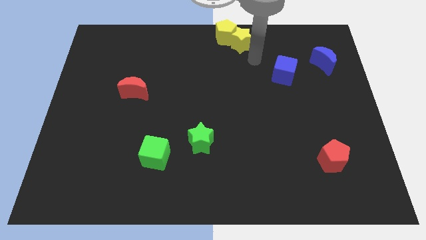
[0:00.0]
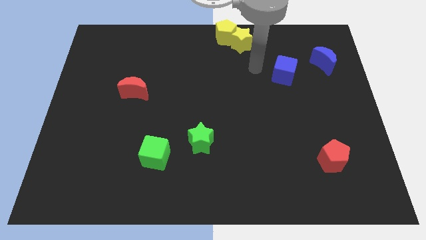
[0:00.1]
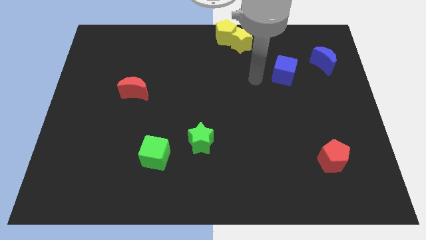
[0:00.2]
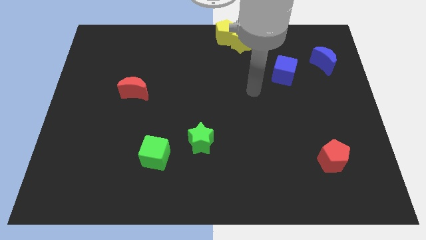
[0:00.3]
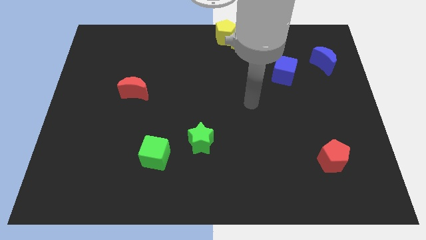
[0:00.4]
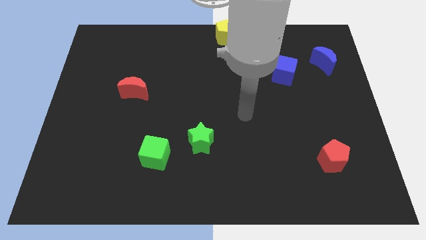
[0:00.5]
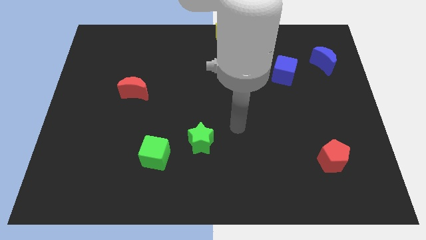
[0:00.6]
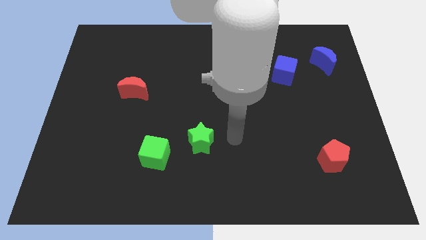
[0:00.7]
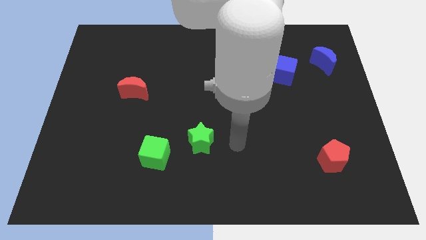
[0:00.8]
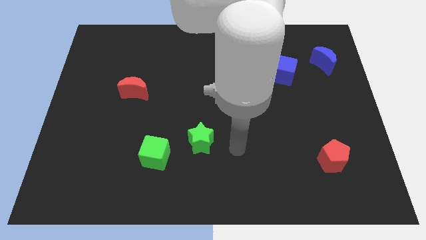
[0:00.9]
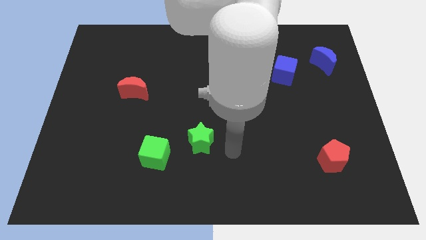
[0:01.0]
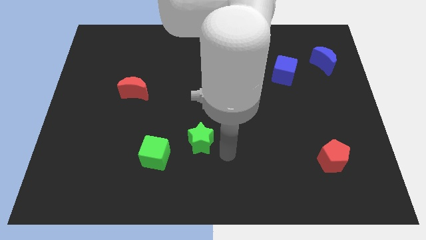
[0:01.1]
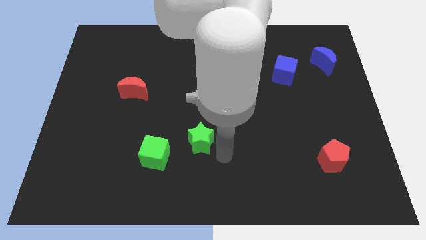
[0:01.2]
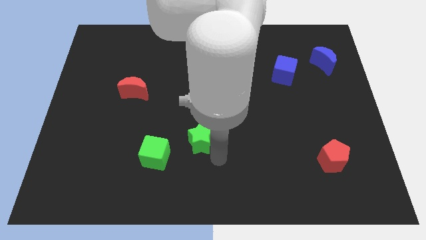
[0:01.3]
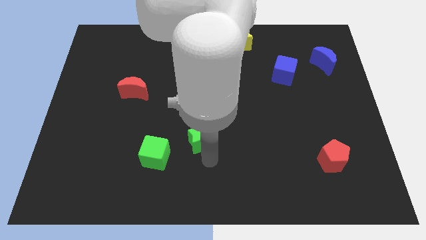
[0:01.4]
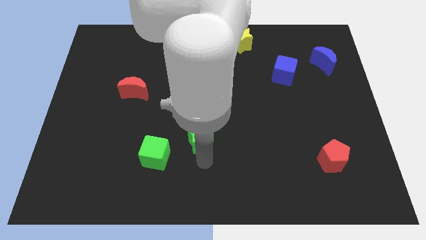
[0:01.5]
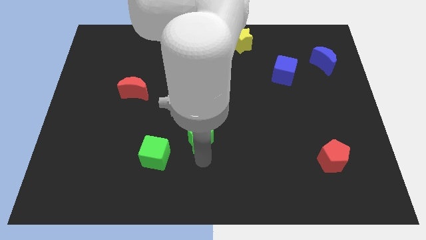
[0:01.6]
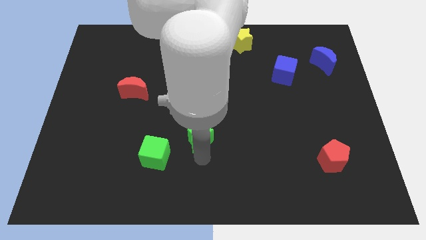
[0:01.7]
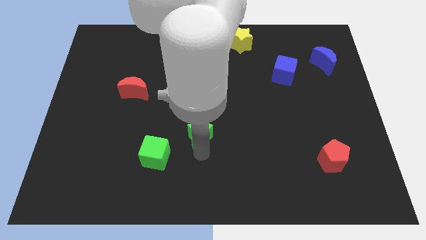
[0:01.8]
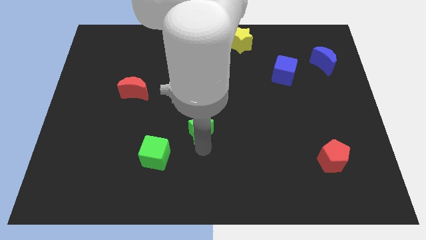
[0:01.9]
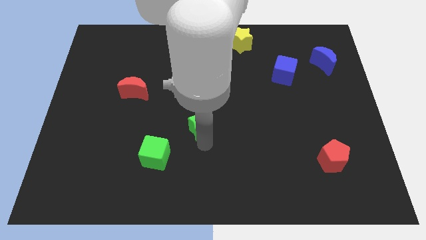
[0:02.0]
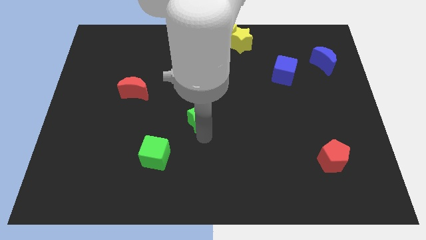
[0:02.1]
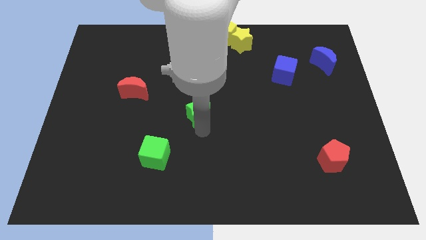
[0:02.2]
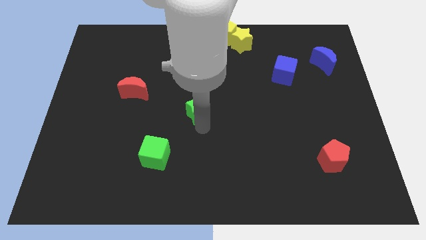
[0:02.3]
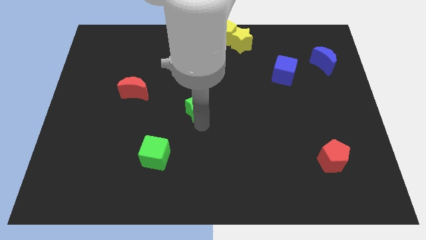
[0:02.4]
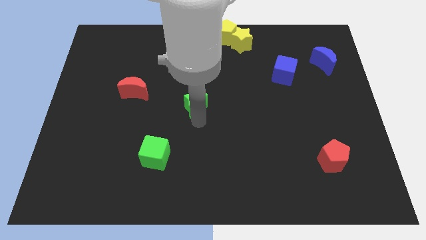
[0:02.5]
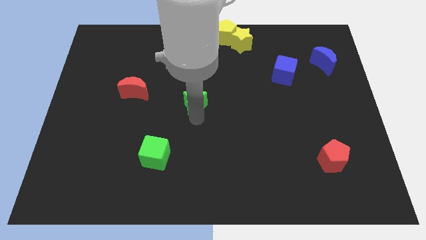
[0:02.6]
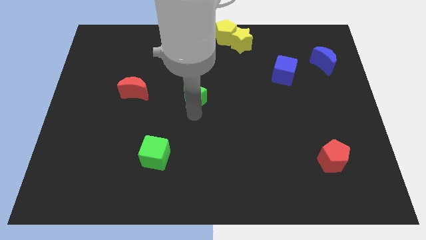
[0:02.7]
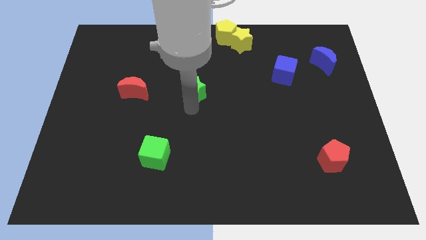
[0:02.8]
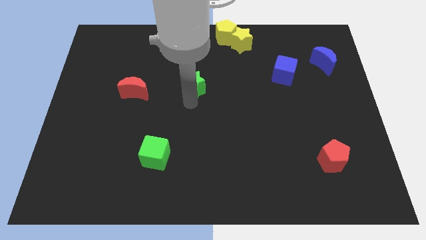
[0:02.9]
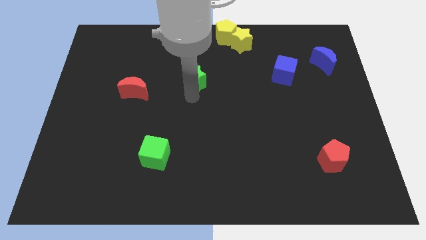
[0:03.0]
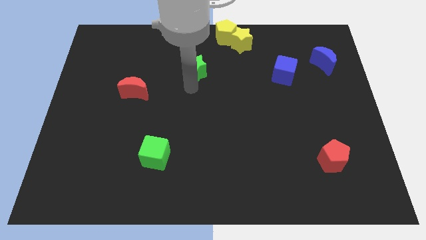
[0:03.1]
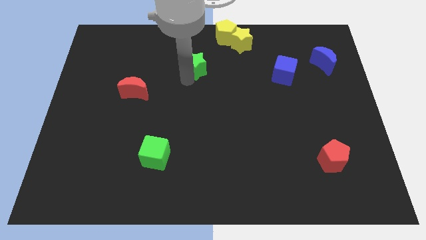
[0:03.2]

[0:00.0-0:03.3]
slide the green star to the left of the blue cube

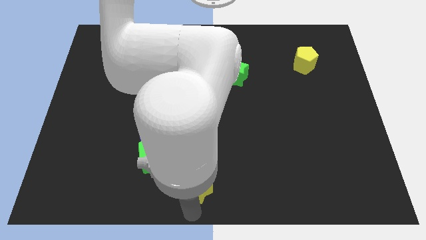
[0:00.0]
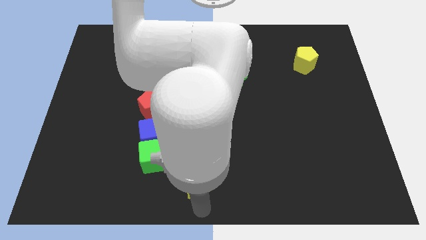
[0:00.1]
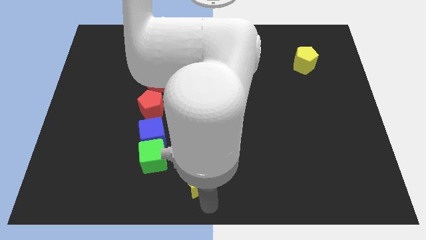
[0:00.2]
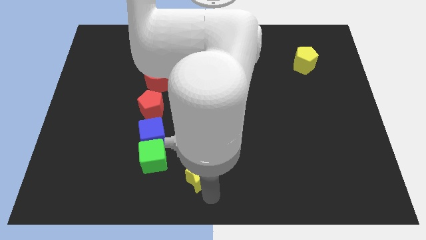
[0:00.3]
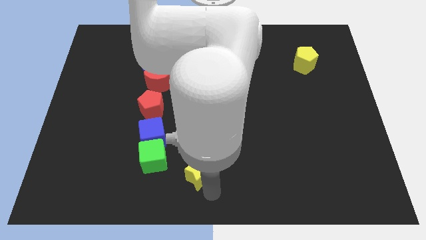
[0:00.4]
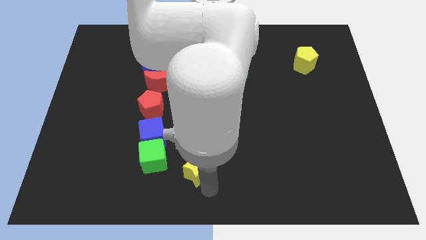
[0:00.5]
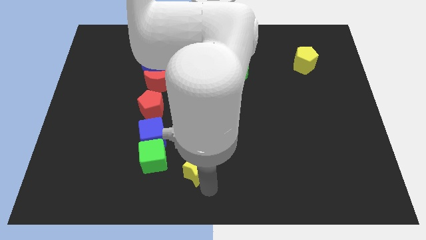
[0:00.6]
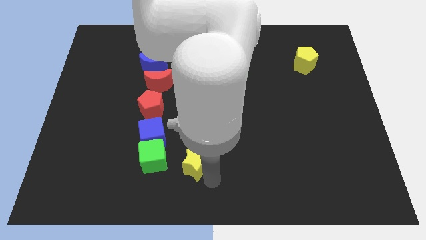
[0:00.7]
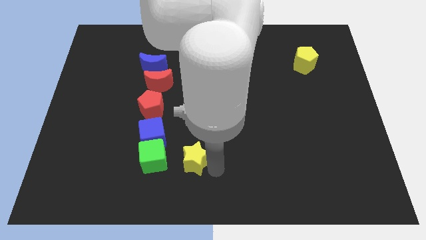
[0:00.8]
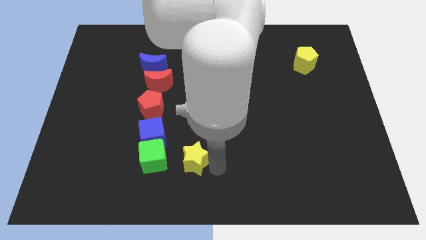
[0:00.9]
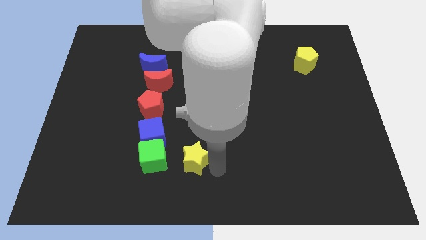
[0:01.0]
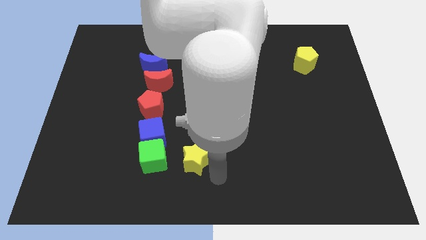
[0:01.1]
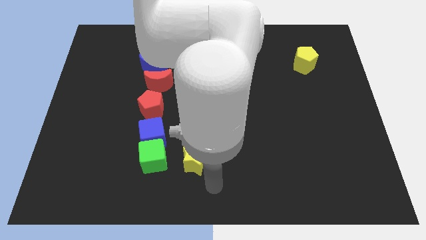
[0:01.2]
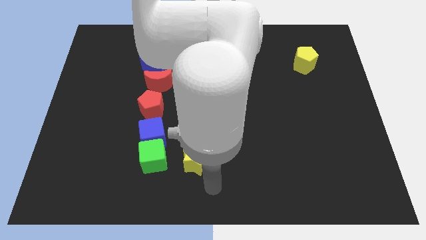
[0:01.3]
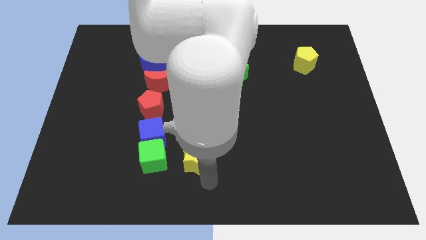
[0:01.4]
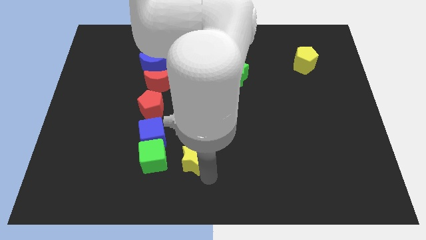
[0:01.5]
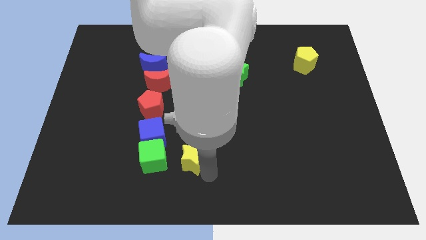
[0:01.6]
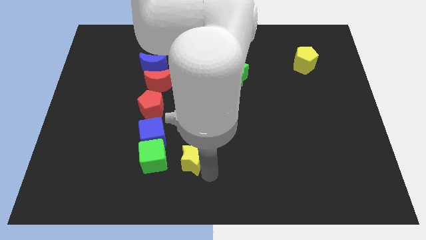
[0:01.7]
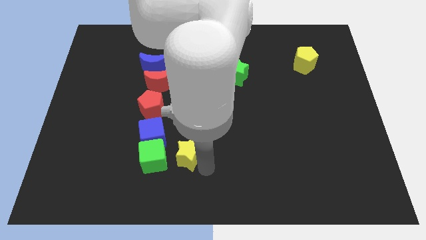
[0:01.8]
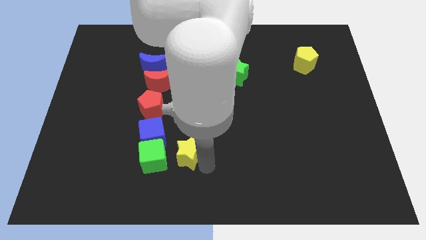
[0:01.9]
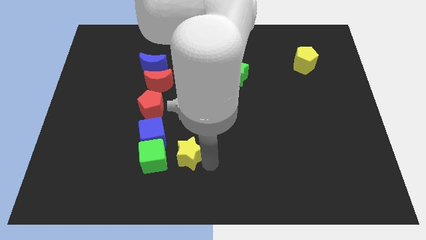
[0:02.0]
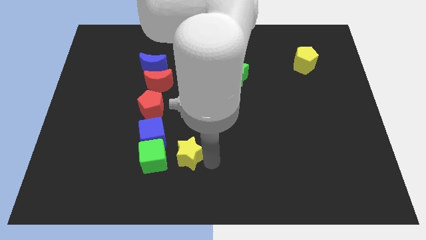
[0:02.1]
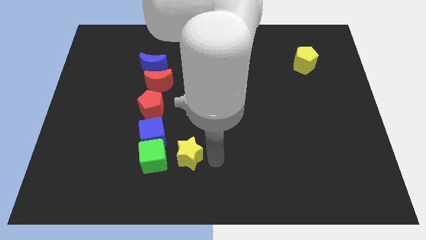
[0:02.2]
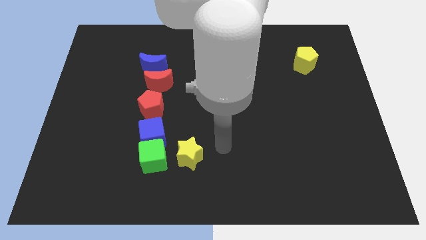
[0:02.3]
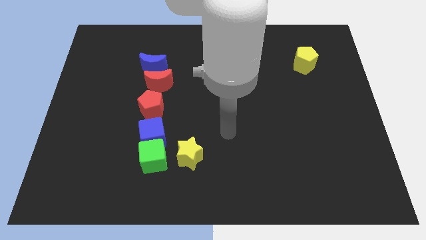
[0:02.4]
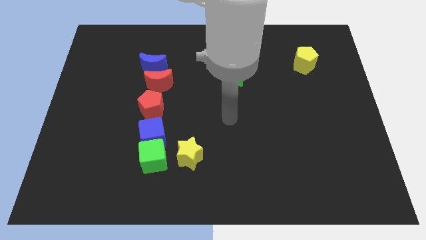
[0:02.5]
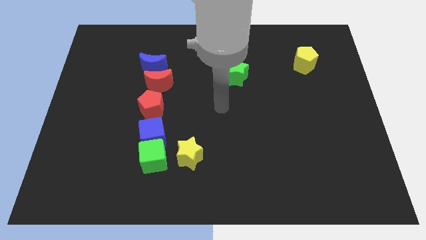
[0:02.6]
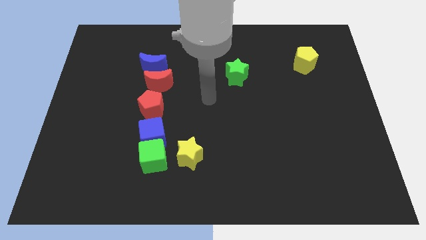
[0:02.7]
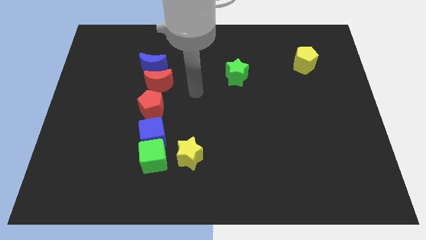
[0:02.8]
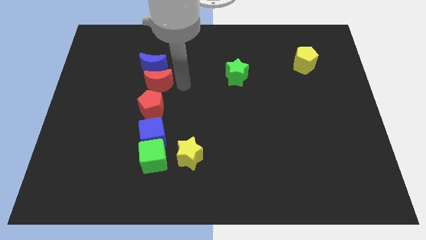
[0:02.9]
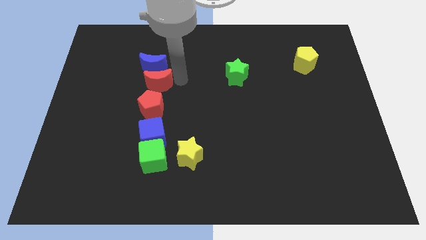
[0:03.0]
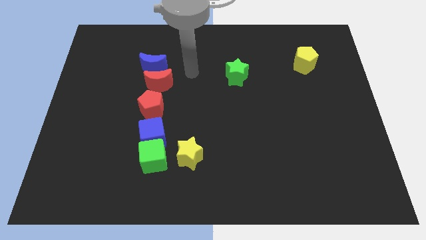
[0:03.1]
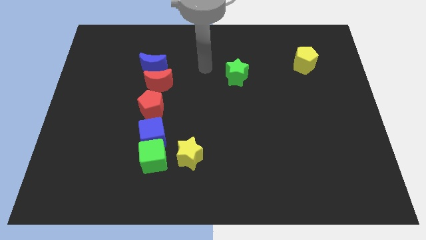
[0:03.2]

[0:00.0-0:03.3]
place the yellow star right of the green cube

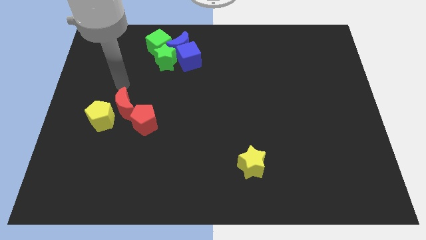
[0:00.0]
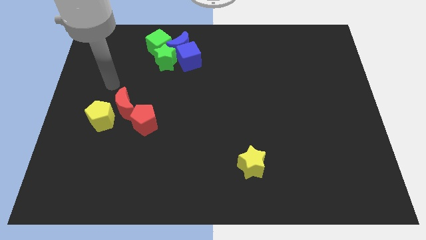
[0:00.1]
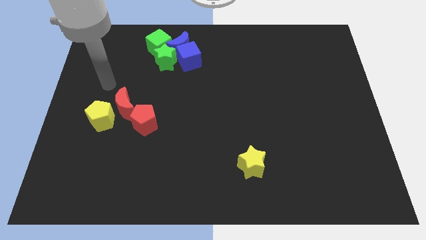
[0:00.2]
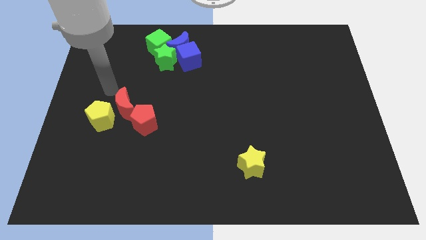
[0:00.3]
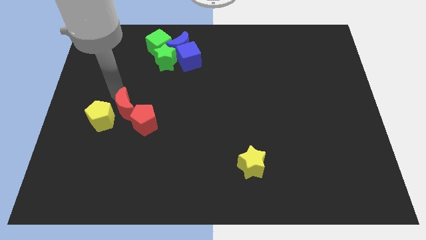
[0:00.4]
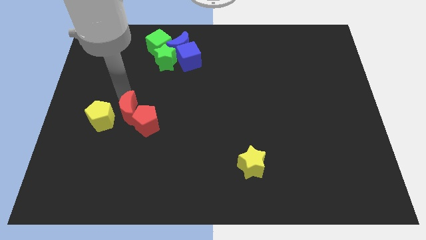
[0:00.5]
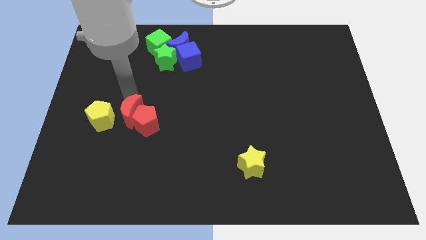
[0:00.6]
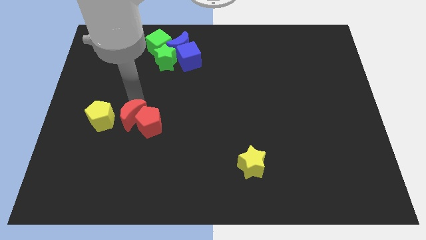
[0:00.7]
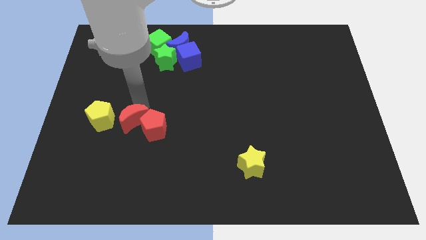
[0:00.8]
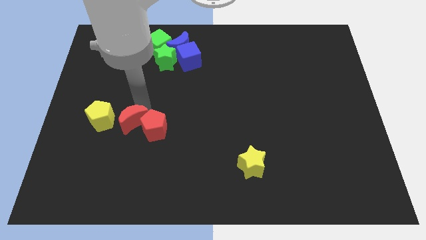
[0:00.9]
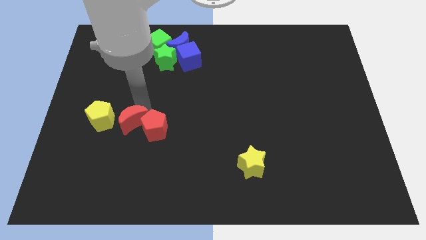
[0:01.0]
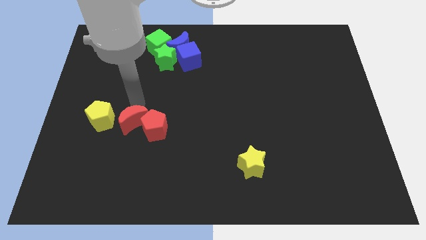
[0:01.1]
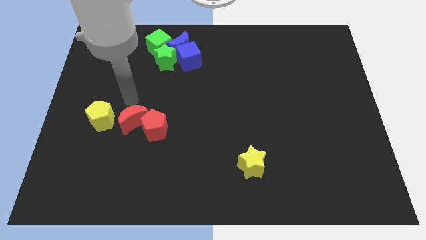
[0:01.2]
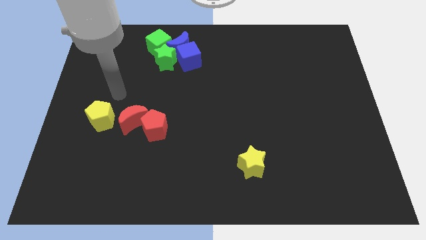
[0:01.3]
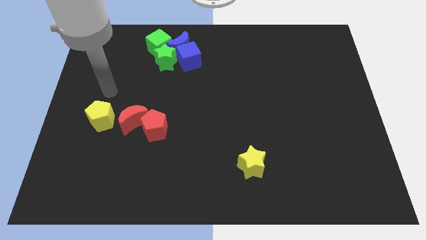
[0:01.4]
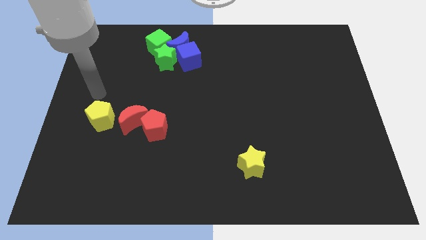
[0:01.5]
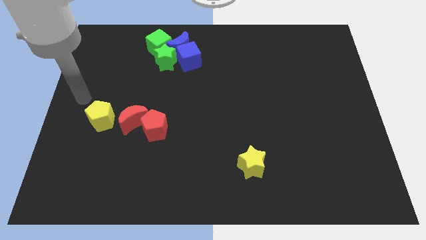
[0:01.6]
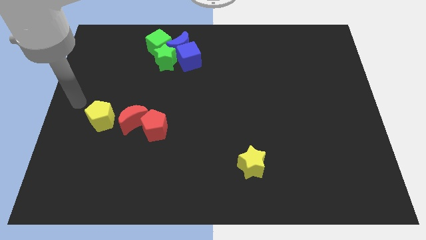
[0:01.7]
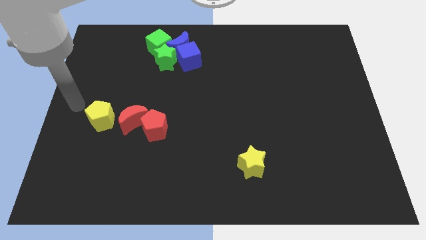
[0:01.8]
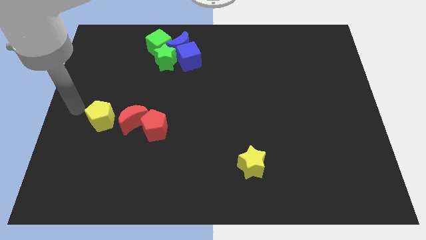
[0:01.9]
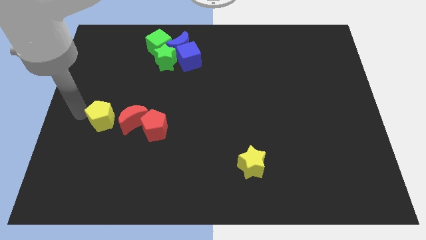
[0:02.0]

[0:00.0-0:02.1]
place the arm on the left of the yellow pentagon

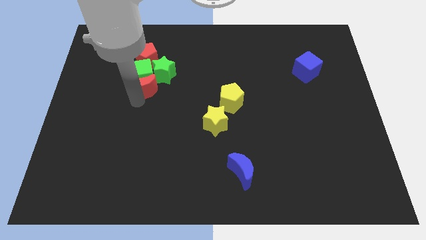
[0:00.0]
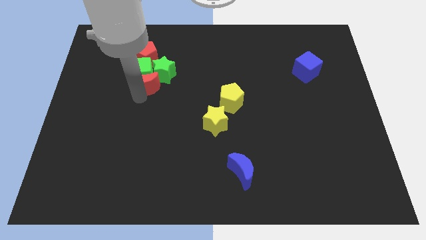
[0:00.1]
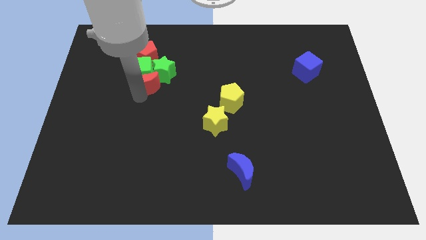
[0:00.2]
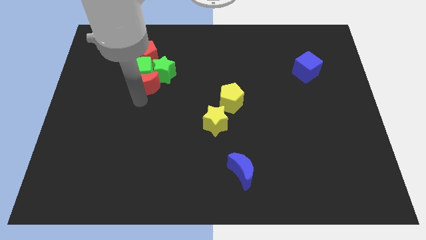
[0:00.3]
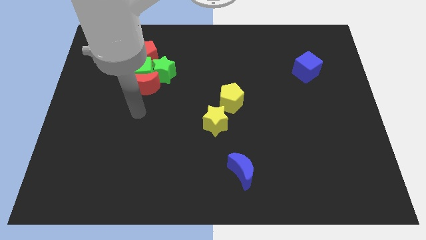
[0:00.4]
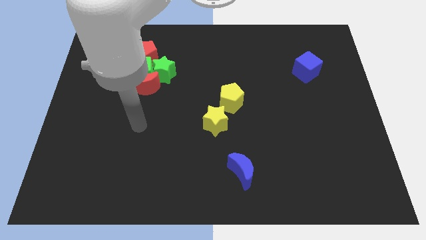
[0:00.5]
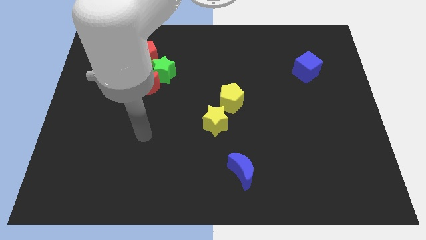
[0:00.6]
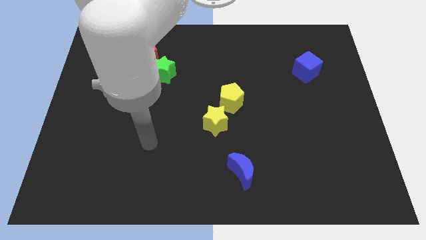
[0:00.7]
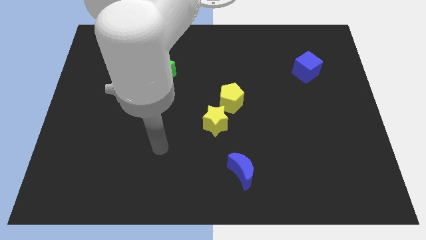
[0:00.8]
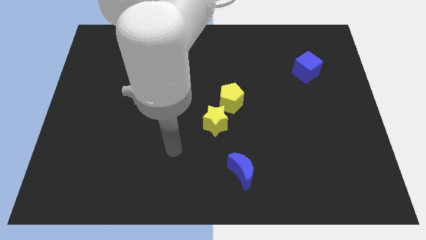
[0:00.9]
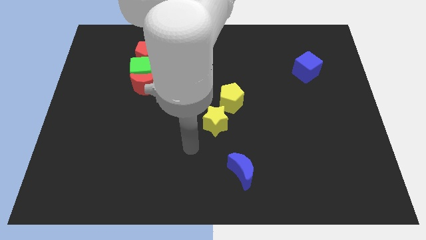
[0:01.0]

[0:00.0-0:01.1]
push the red moon into the green cube
